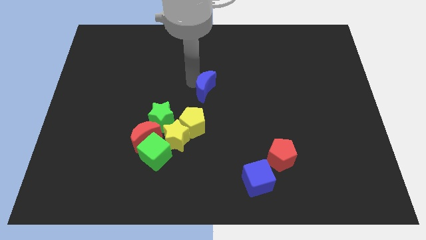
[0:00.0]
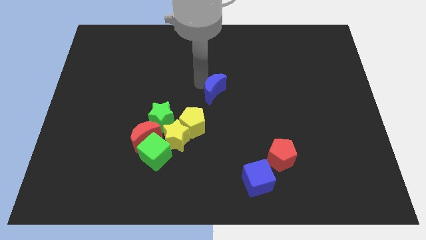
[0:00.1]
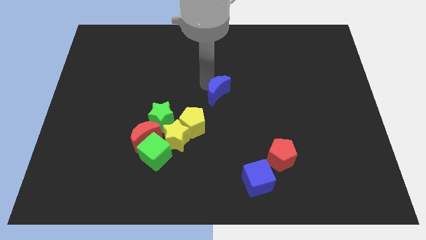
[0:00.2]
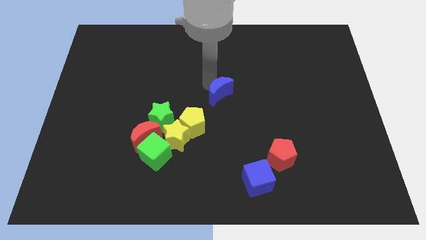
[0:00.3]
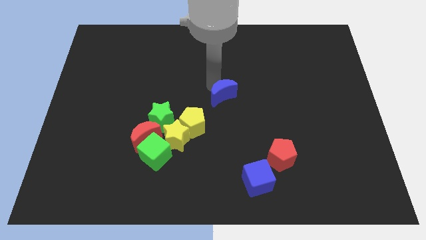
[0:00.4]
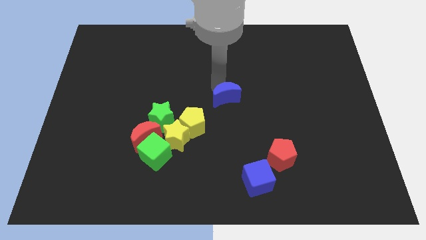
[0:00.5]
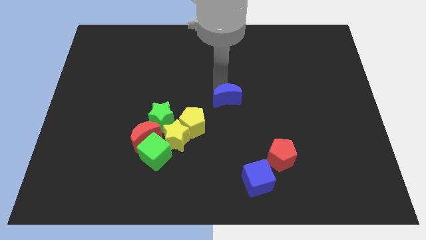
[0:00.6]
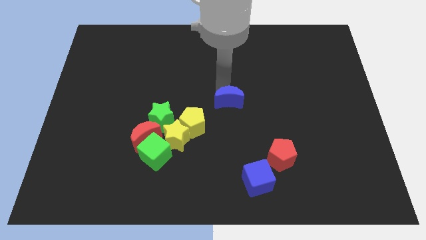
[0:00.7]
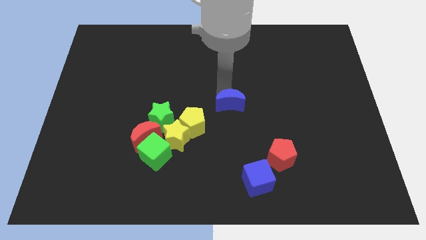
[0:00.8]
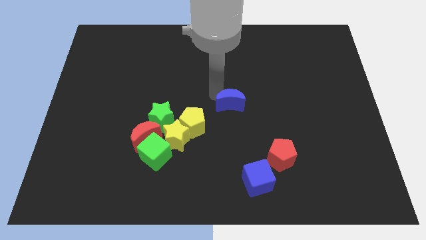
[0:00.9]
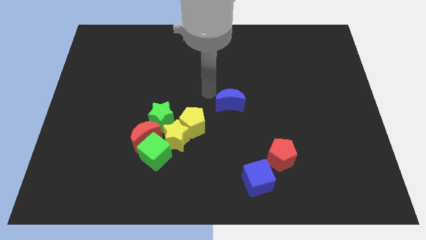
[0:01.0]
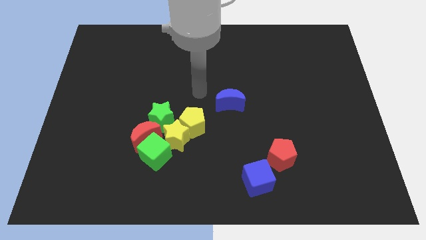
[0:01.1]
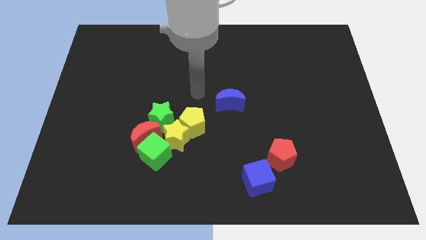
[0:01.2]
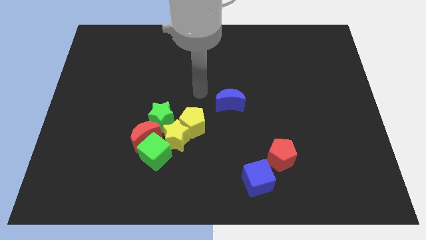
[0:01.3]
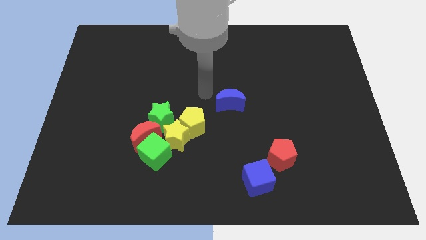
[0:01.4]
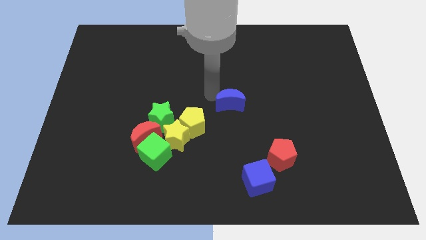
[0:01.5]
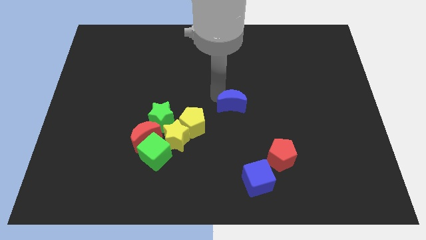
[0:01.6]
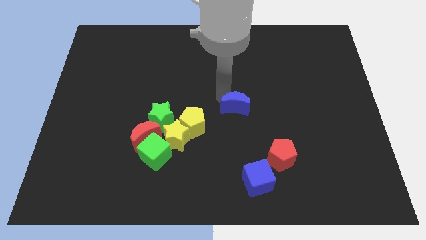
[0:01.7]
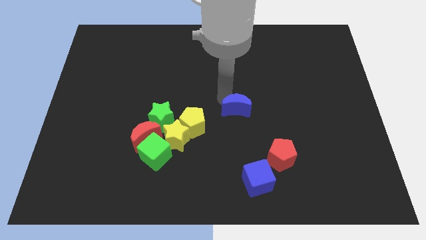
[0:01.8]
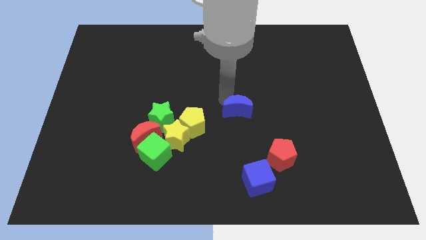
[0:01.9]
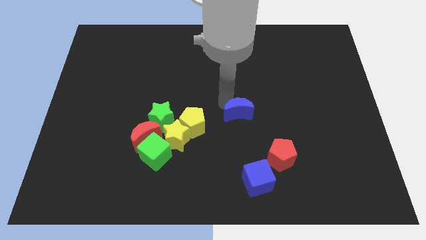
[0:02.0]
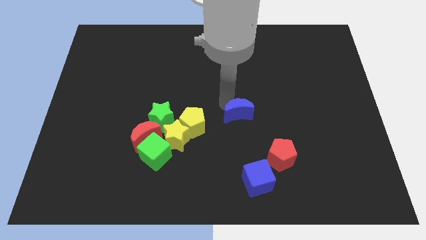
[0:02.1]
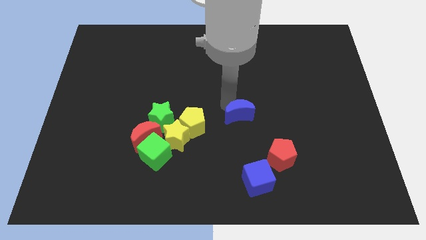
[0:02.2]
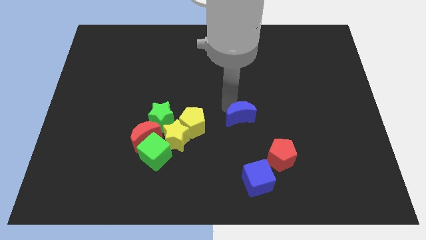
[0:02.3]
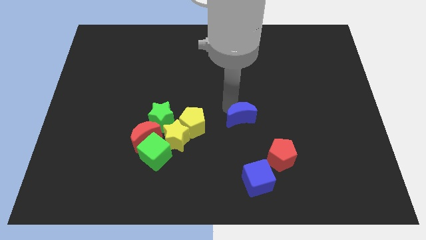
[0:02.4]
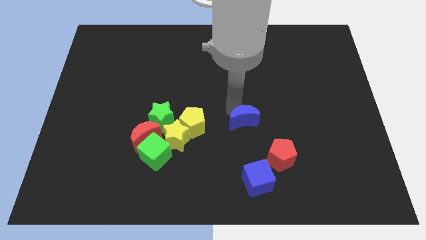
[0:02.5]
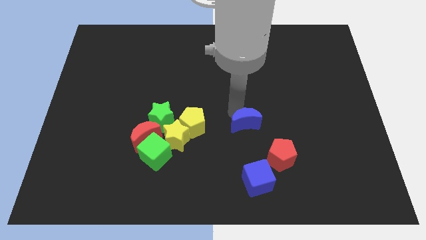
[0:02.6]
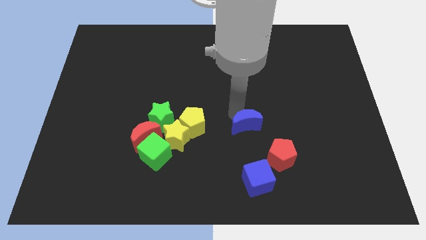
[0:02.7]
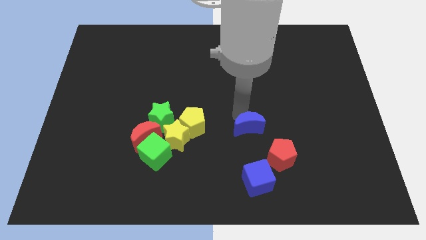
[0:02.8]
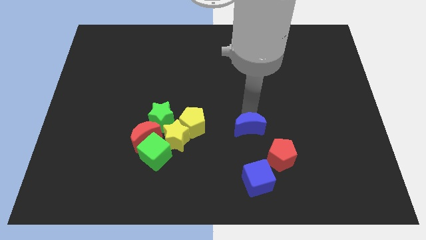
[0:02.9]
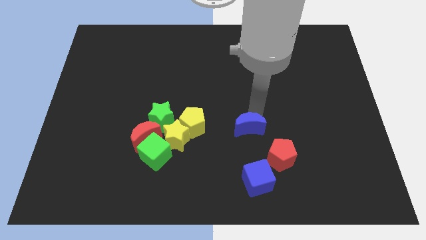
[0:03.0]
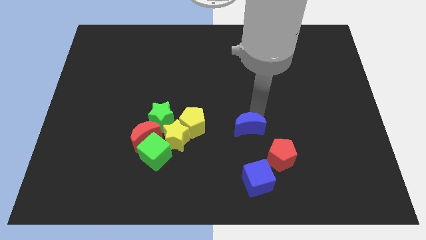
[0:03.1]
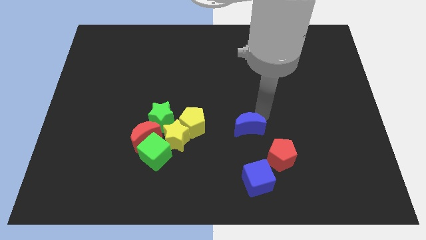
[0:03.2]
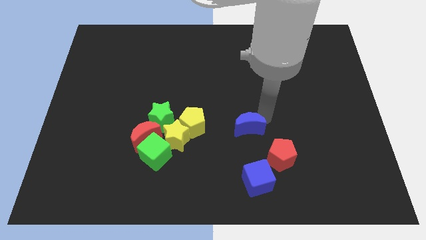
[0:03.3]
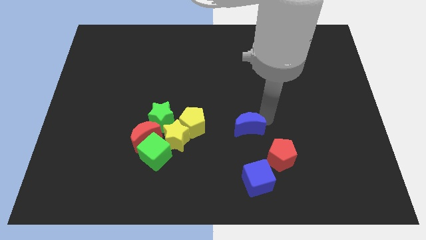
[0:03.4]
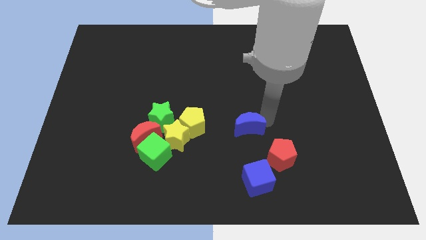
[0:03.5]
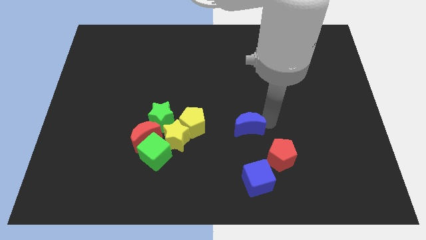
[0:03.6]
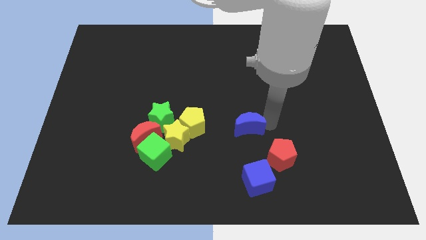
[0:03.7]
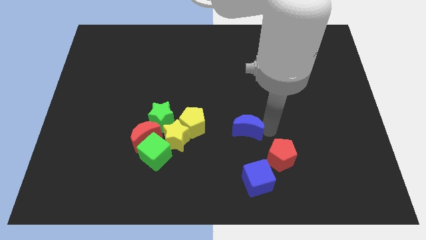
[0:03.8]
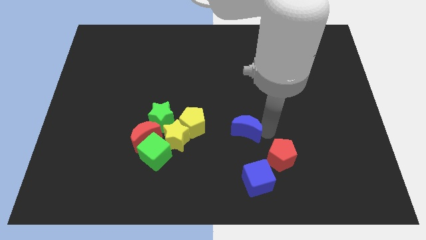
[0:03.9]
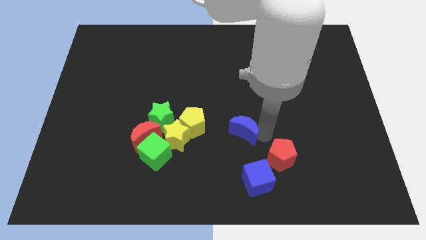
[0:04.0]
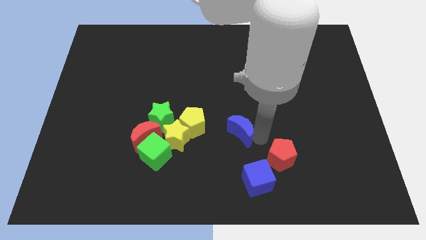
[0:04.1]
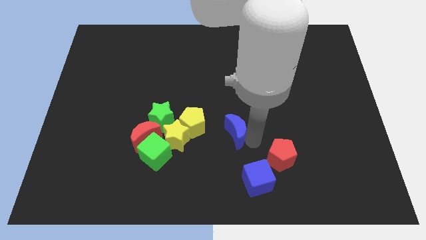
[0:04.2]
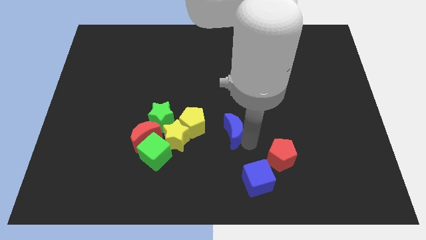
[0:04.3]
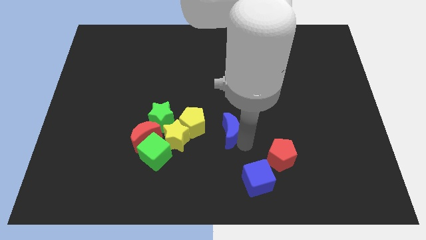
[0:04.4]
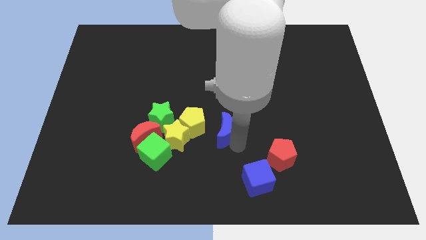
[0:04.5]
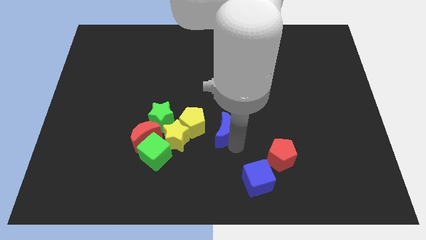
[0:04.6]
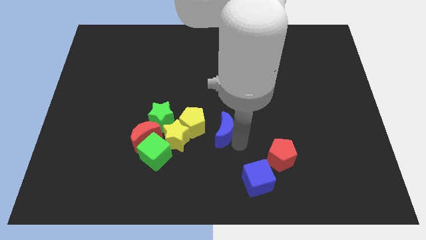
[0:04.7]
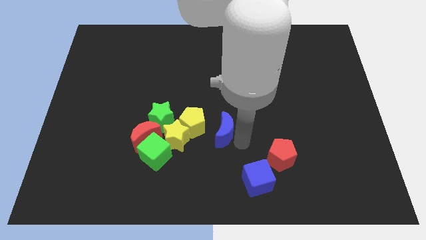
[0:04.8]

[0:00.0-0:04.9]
place blue moon to the right of yellow pentagon

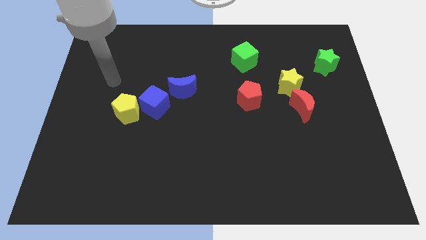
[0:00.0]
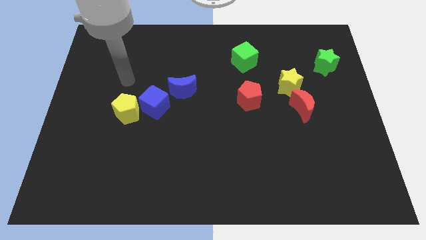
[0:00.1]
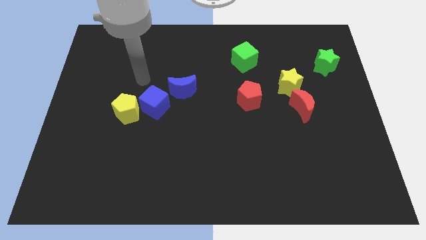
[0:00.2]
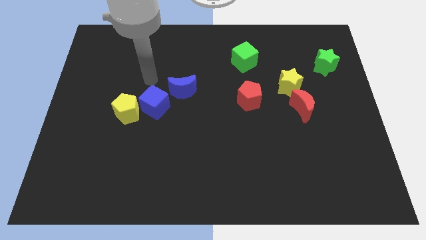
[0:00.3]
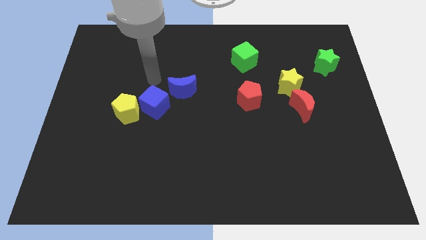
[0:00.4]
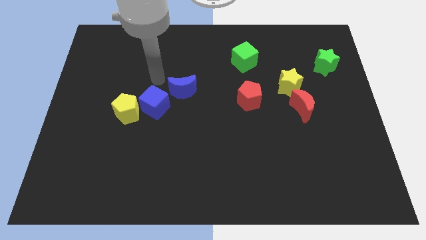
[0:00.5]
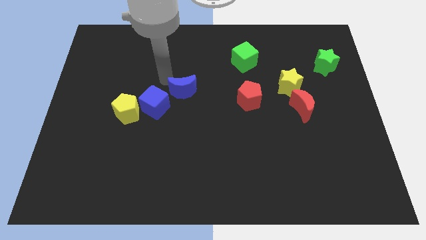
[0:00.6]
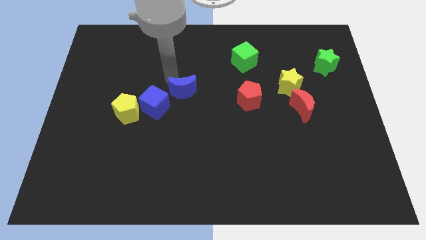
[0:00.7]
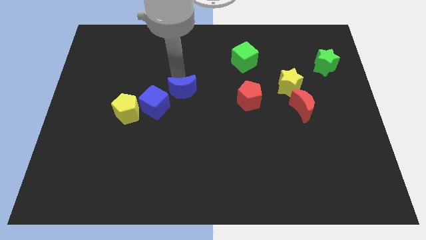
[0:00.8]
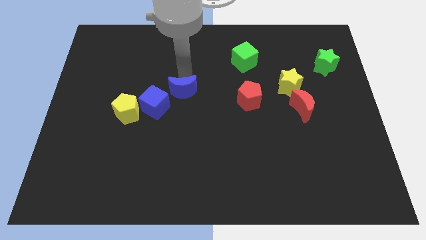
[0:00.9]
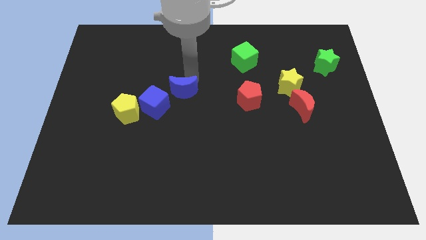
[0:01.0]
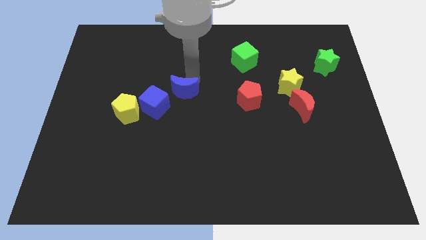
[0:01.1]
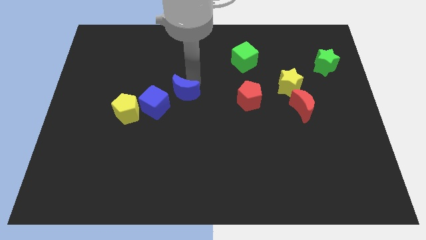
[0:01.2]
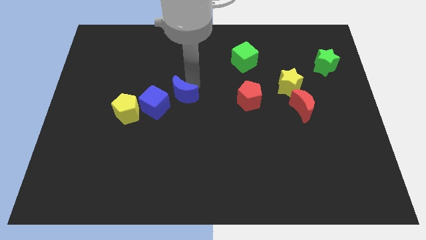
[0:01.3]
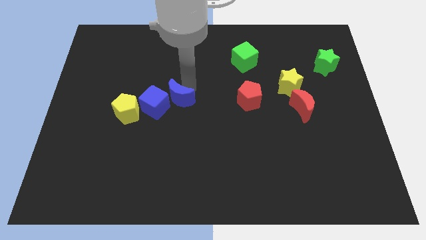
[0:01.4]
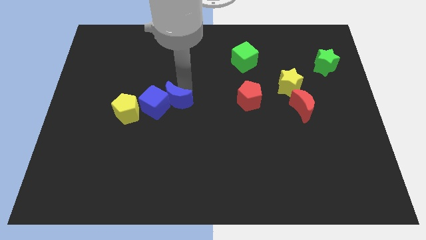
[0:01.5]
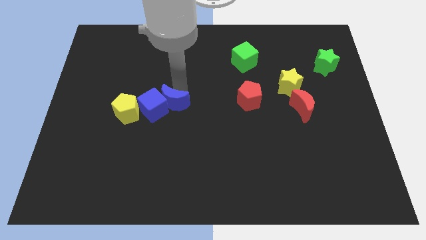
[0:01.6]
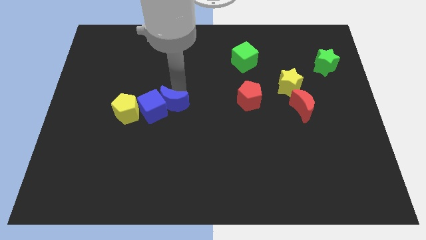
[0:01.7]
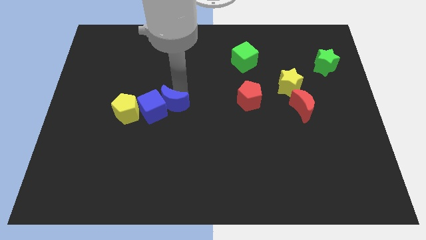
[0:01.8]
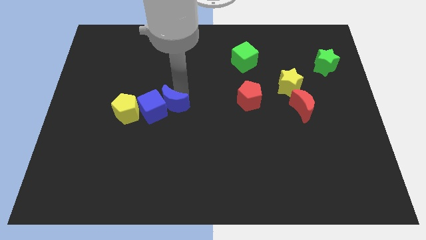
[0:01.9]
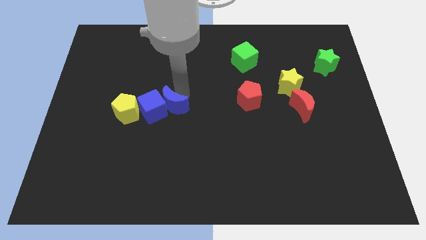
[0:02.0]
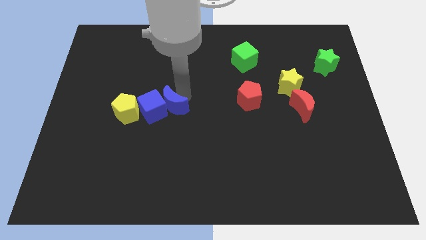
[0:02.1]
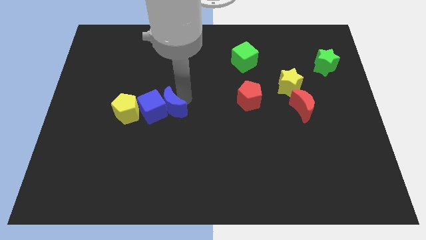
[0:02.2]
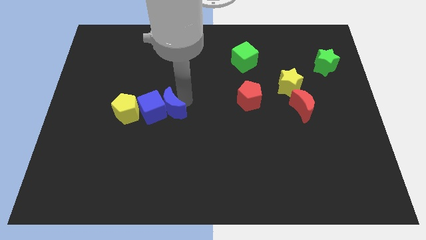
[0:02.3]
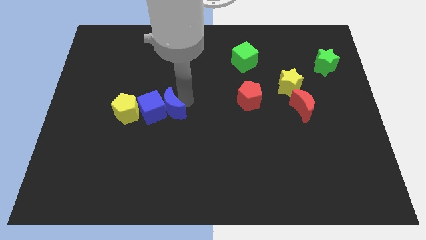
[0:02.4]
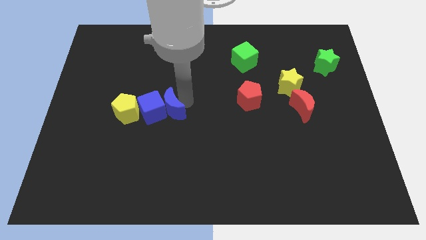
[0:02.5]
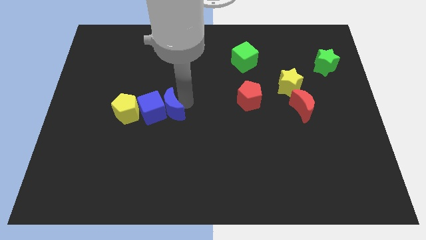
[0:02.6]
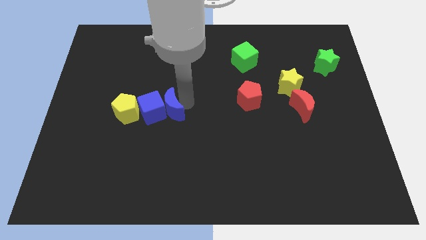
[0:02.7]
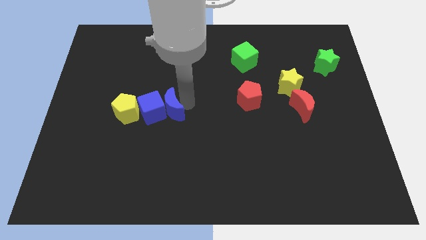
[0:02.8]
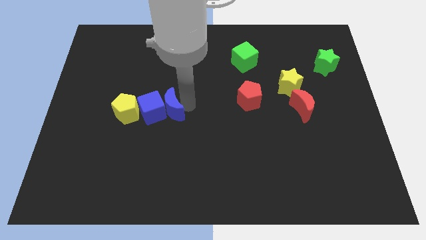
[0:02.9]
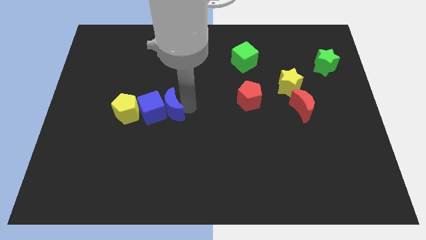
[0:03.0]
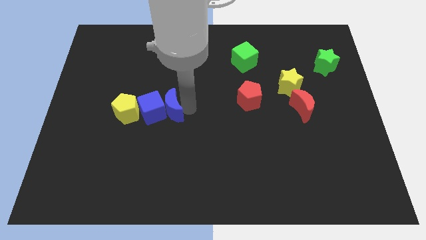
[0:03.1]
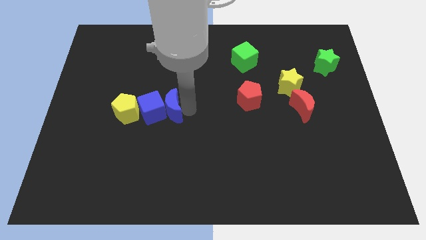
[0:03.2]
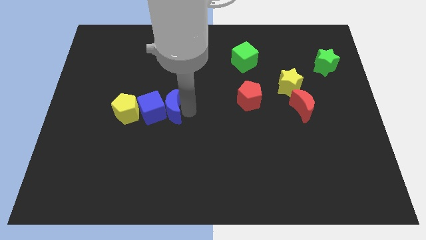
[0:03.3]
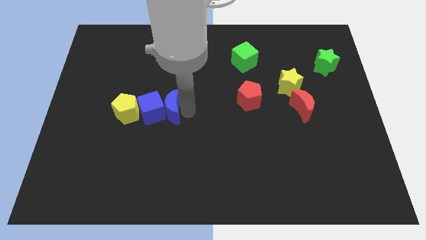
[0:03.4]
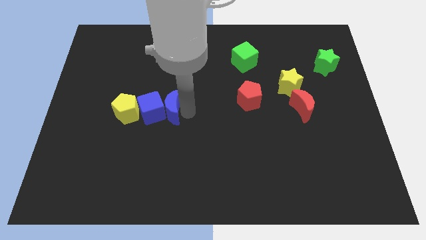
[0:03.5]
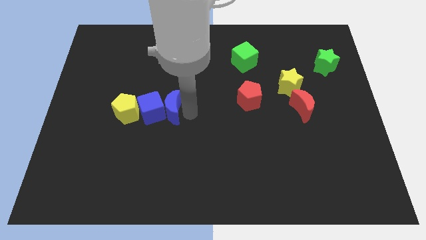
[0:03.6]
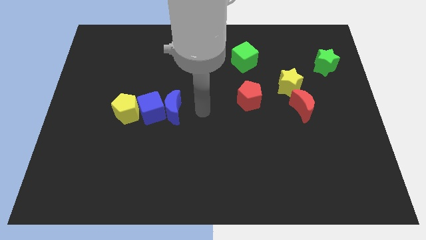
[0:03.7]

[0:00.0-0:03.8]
make a horizontal line with the blue blocks and yellow pentagon

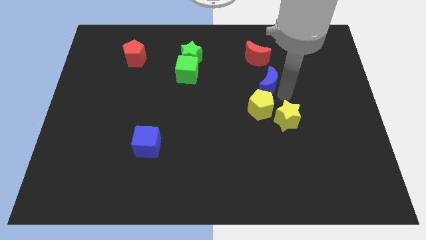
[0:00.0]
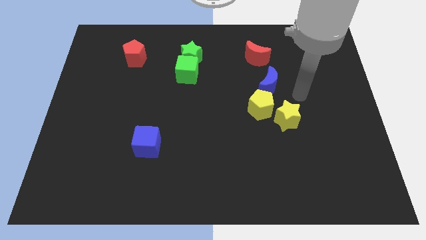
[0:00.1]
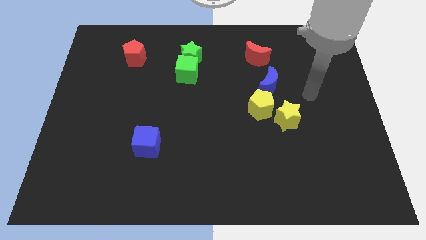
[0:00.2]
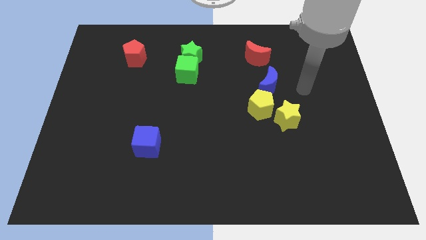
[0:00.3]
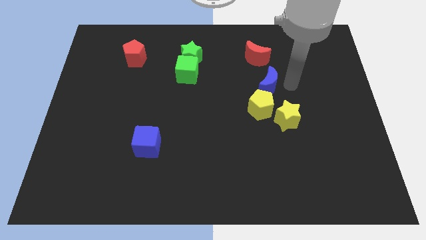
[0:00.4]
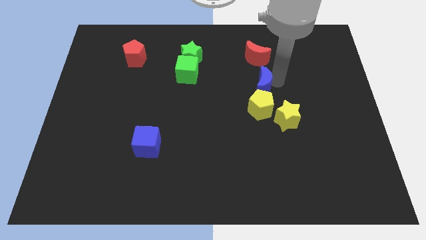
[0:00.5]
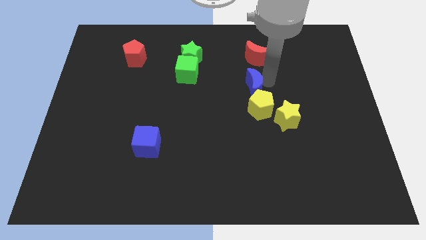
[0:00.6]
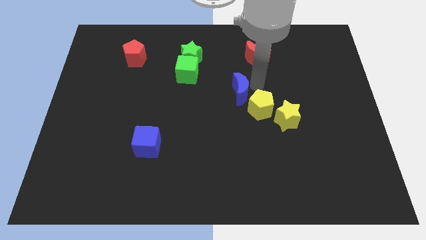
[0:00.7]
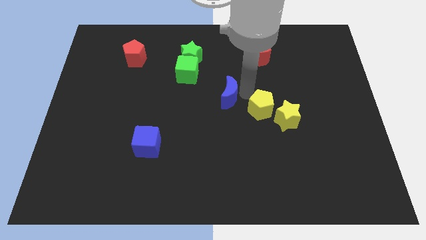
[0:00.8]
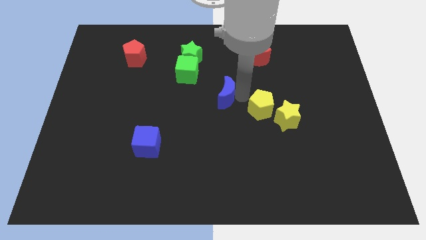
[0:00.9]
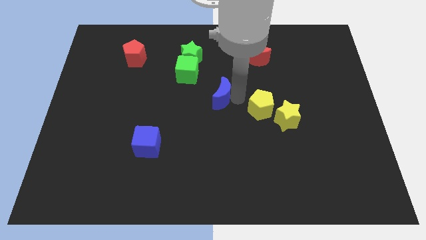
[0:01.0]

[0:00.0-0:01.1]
place blue crescent in between green cube and yellow pentagon
